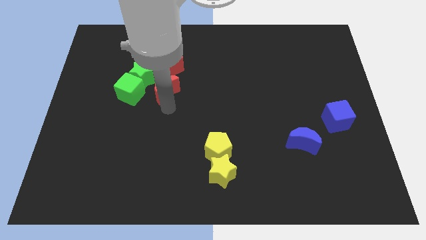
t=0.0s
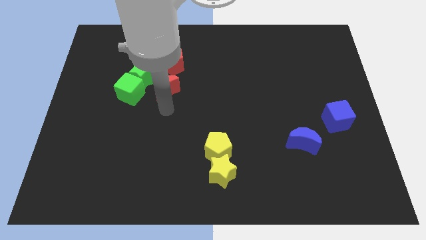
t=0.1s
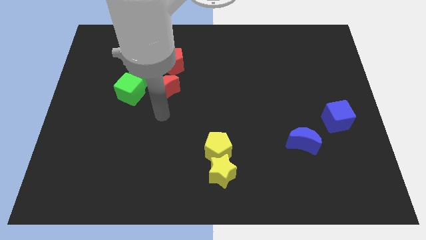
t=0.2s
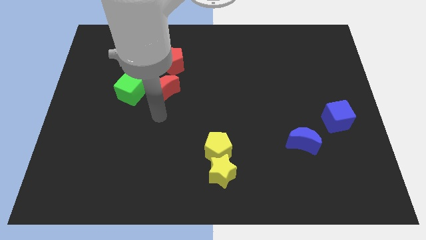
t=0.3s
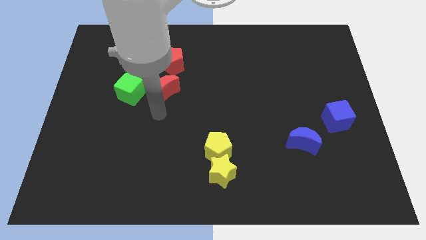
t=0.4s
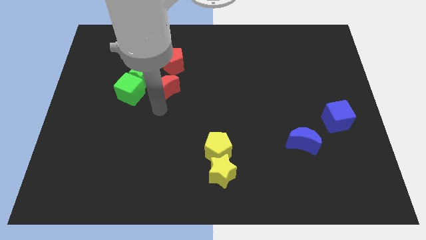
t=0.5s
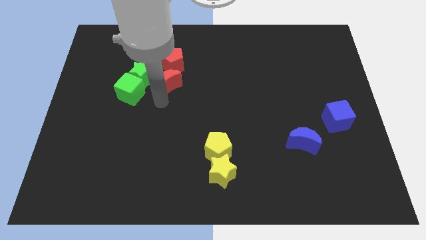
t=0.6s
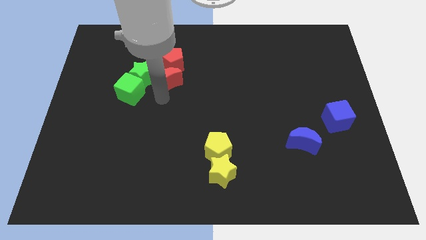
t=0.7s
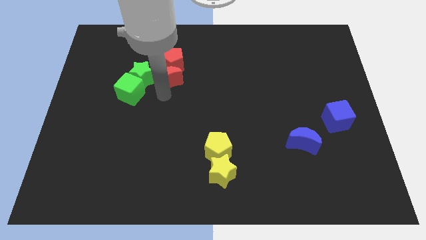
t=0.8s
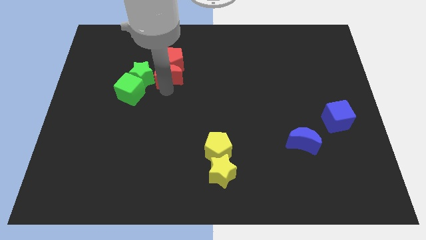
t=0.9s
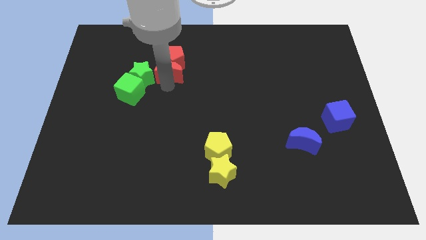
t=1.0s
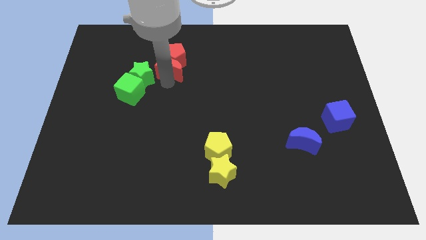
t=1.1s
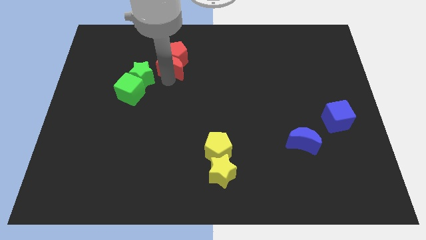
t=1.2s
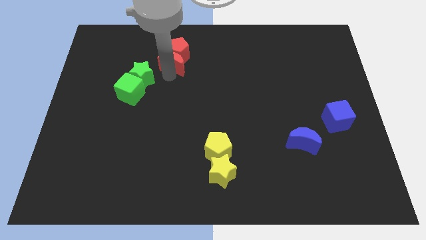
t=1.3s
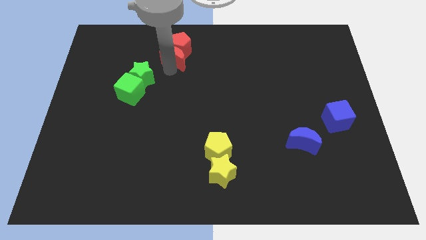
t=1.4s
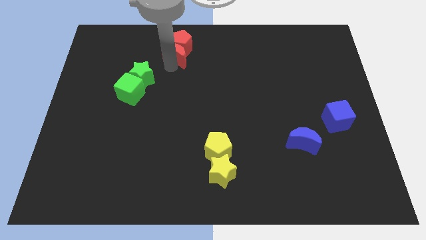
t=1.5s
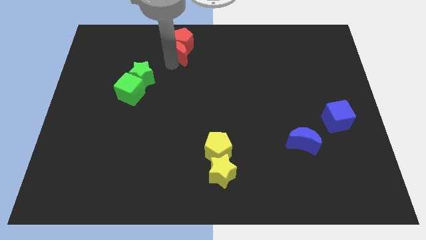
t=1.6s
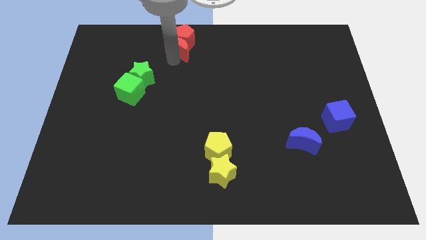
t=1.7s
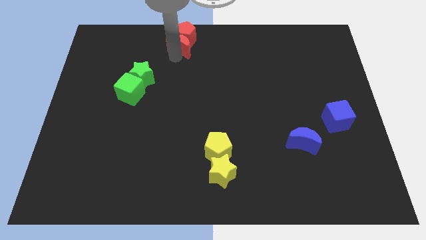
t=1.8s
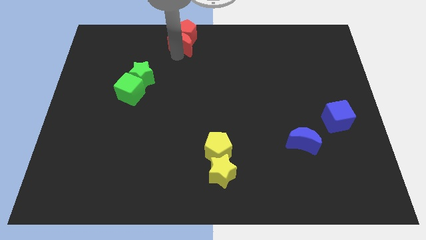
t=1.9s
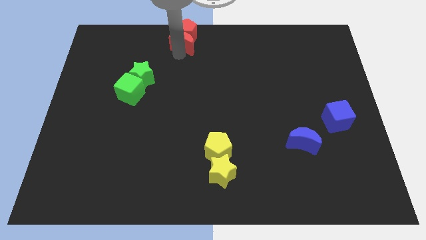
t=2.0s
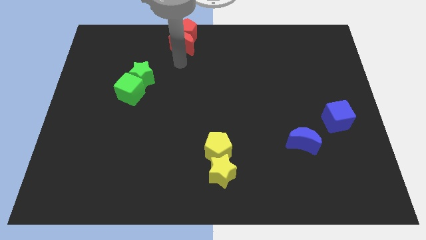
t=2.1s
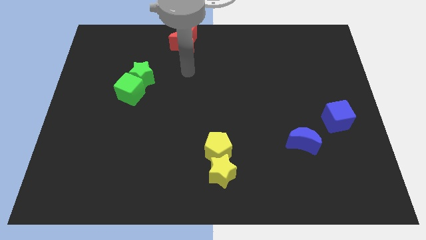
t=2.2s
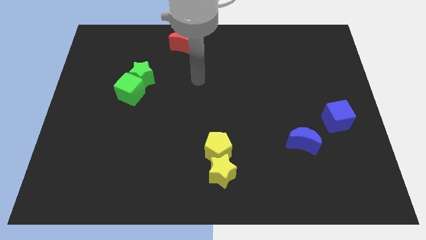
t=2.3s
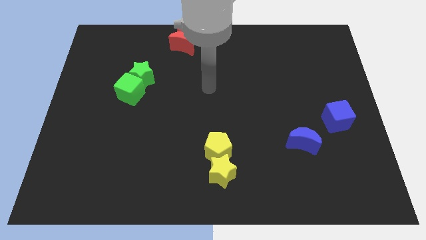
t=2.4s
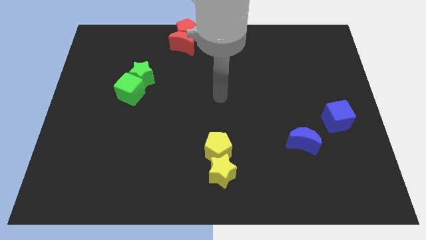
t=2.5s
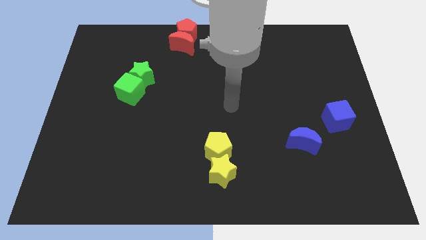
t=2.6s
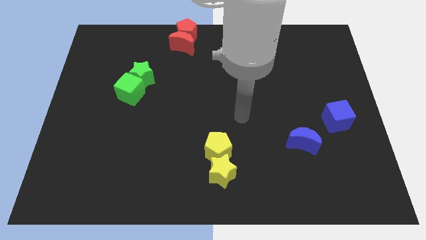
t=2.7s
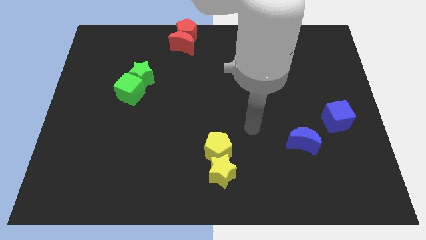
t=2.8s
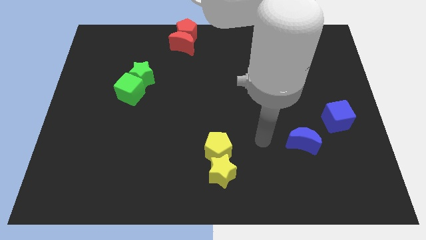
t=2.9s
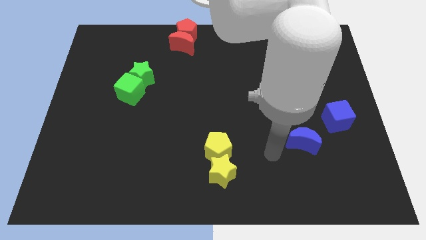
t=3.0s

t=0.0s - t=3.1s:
move the red pentagon to the top center with the red moon

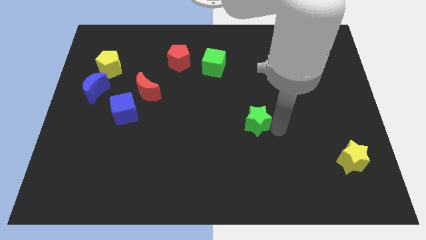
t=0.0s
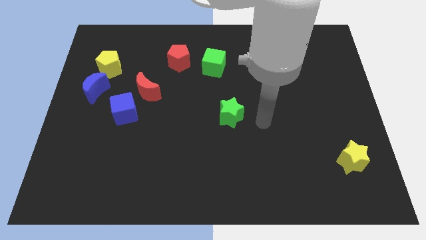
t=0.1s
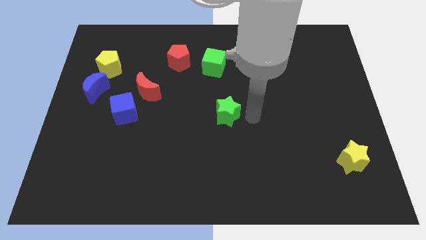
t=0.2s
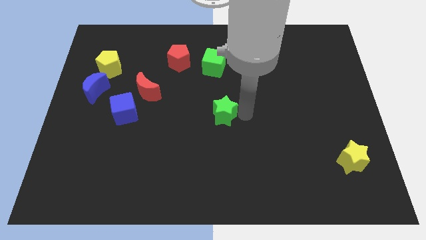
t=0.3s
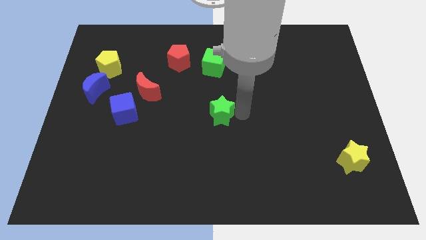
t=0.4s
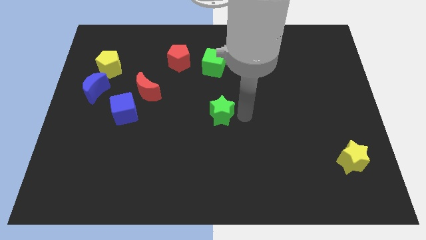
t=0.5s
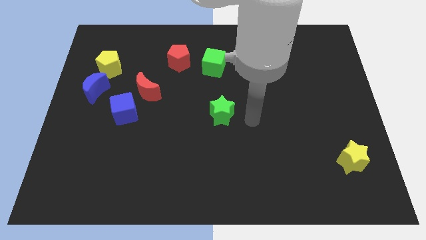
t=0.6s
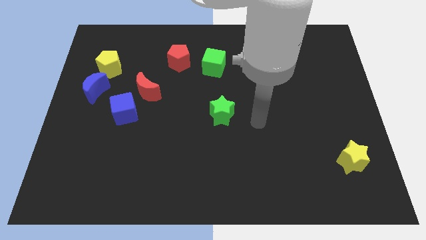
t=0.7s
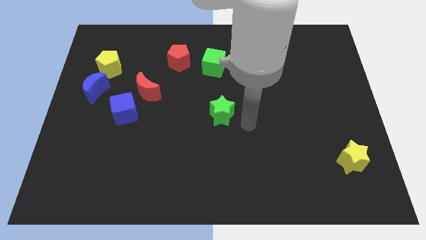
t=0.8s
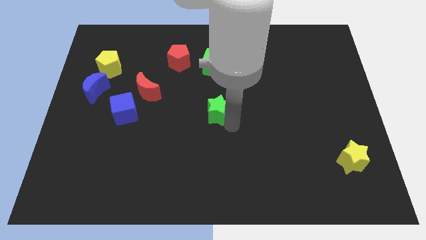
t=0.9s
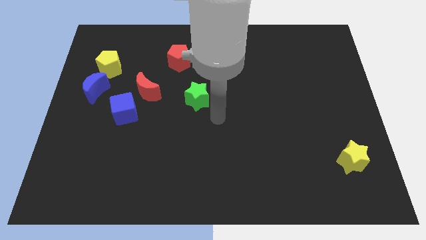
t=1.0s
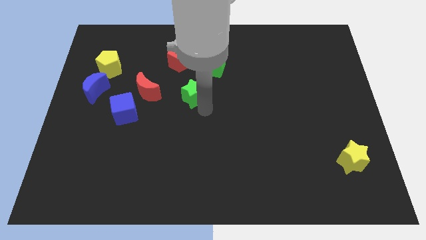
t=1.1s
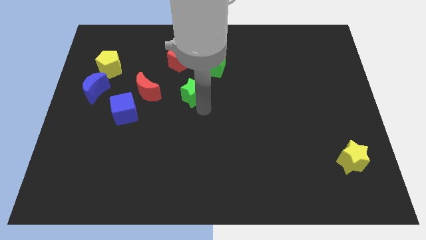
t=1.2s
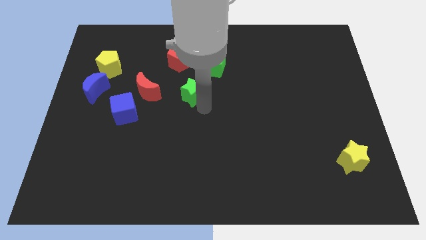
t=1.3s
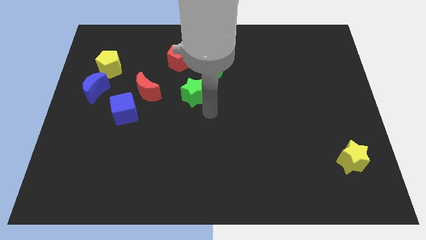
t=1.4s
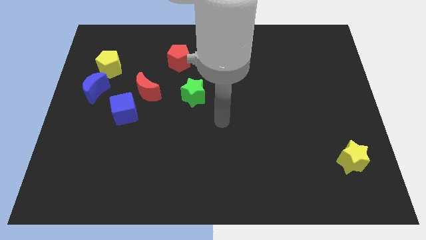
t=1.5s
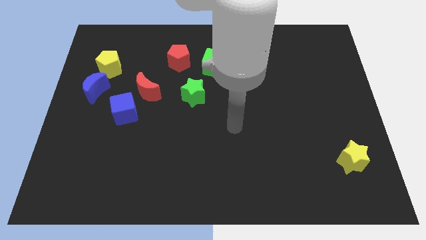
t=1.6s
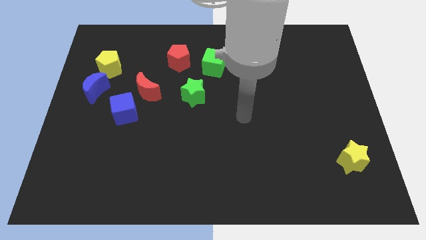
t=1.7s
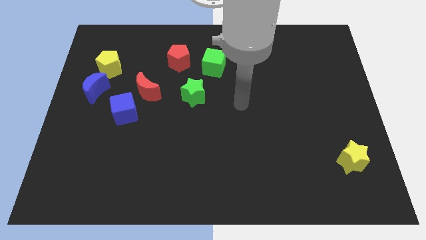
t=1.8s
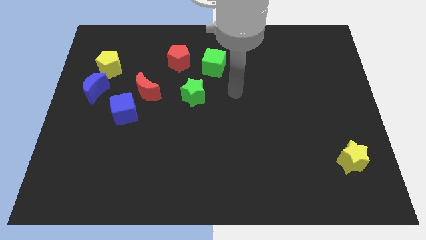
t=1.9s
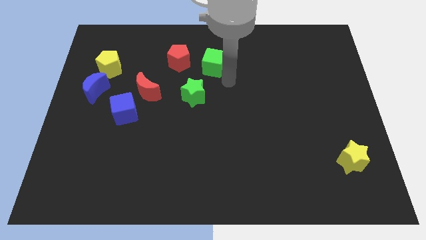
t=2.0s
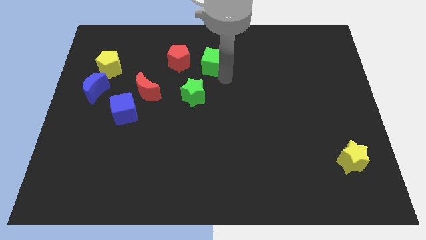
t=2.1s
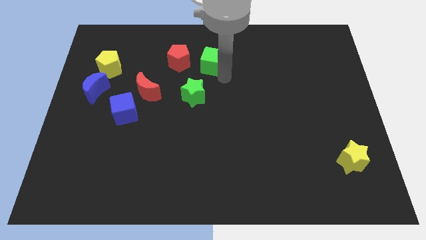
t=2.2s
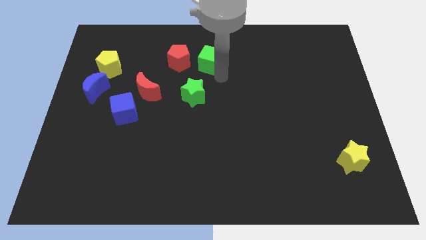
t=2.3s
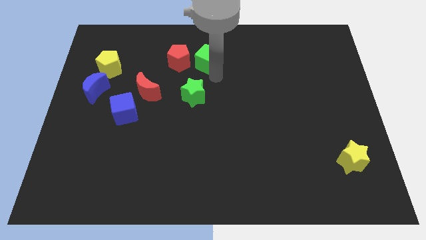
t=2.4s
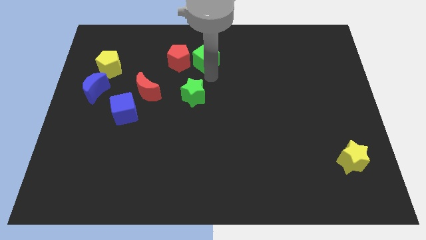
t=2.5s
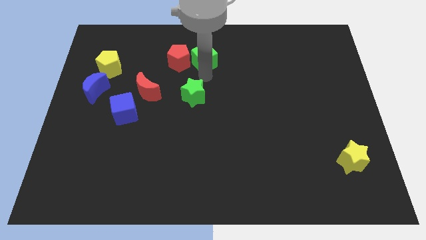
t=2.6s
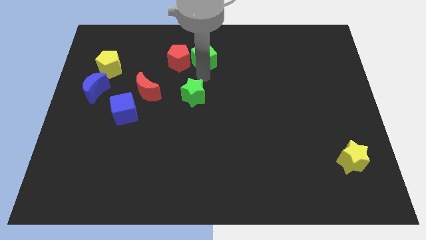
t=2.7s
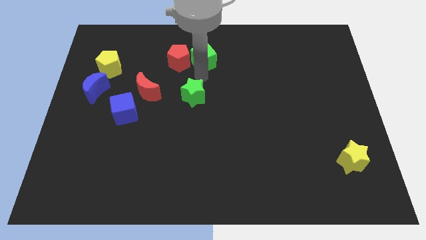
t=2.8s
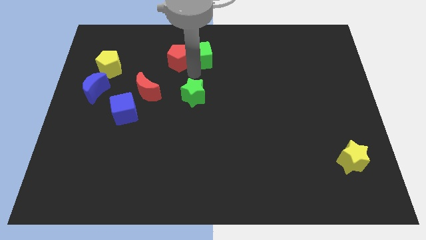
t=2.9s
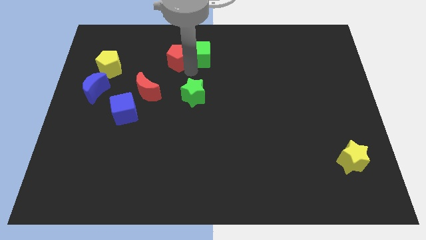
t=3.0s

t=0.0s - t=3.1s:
move the green star and green cube vertically

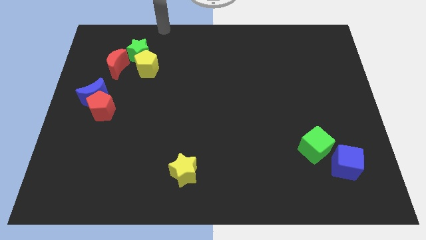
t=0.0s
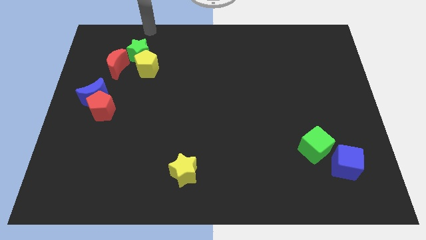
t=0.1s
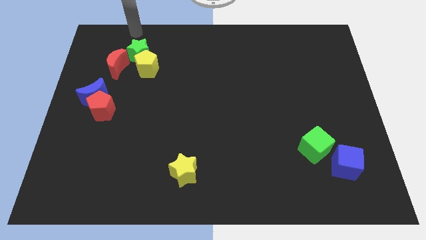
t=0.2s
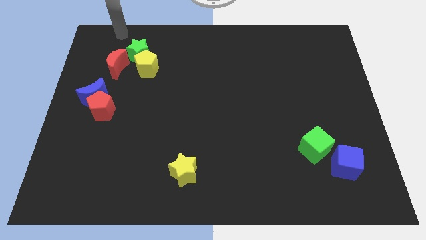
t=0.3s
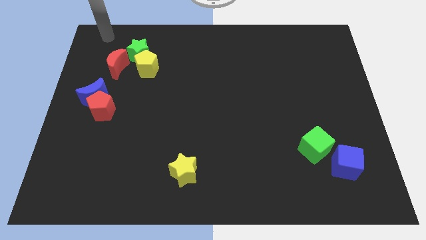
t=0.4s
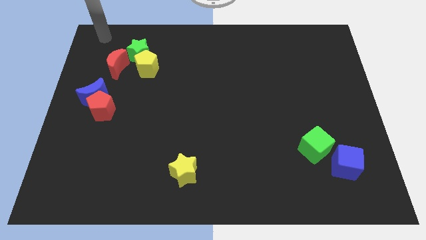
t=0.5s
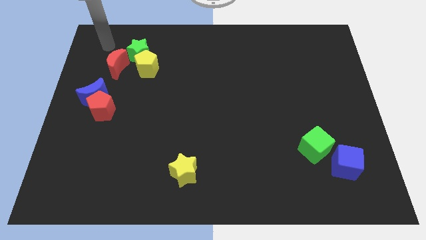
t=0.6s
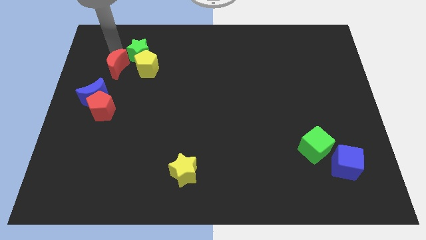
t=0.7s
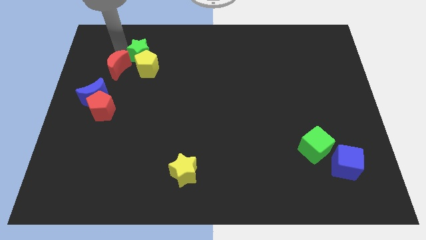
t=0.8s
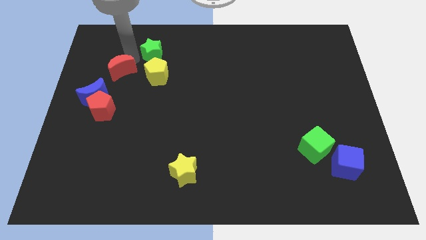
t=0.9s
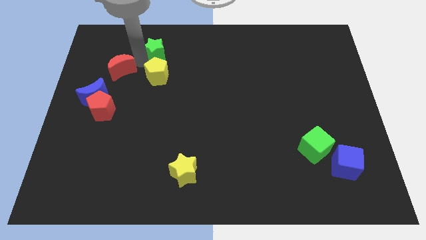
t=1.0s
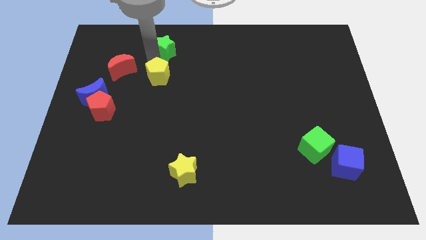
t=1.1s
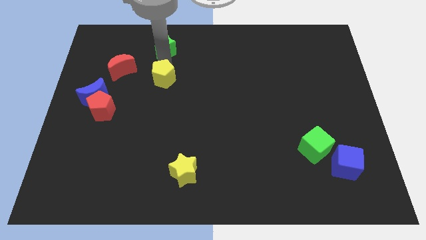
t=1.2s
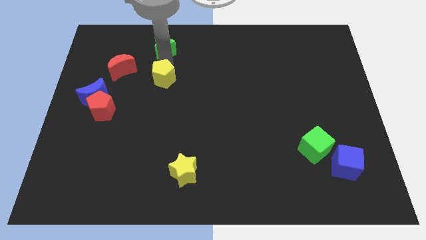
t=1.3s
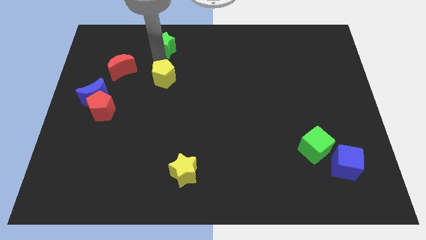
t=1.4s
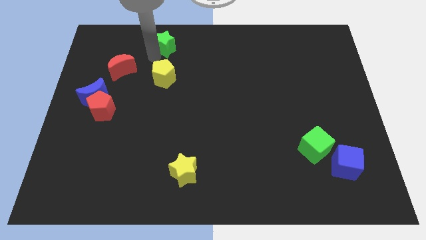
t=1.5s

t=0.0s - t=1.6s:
separate the red moon green star and yellow pentagon

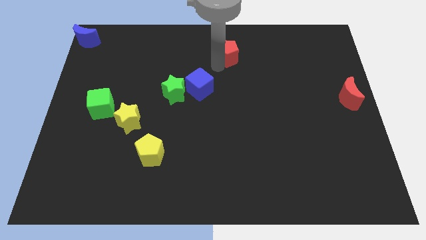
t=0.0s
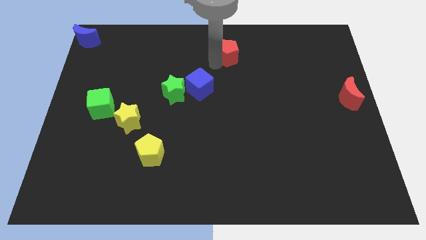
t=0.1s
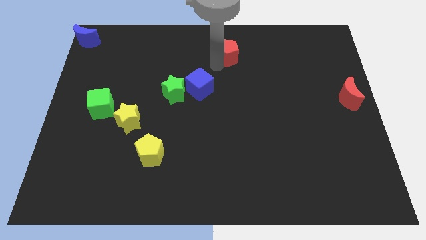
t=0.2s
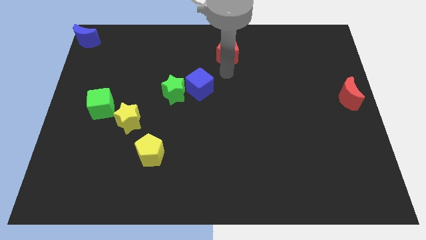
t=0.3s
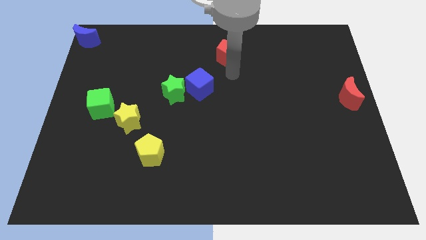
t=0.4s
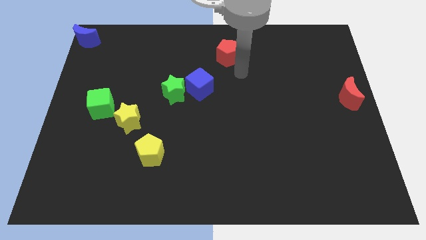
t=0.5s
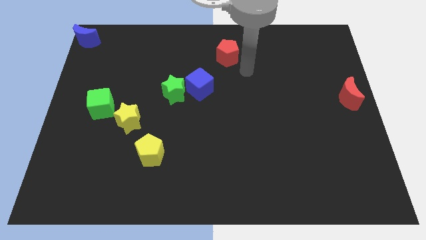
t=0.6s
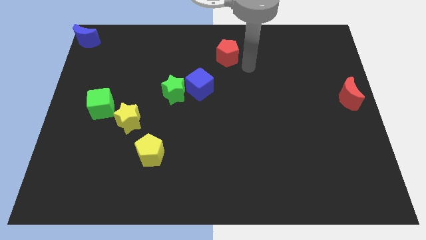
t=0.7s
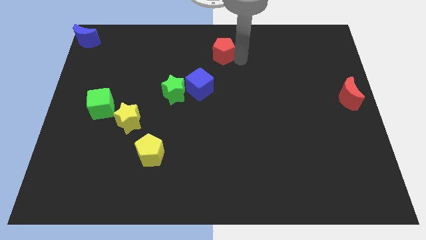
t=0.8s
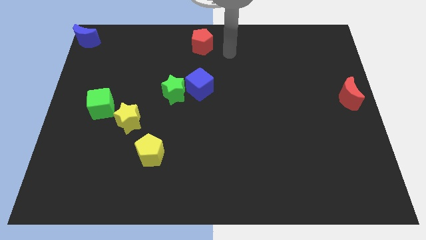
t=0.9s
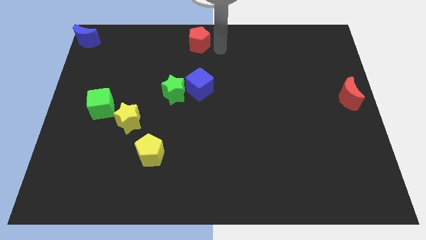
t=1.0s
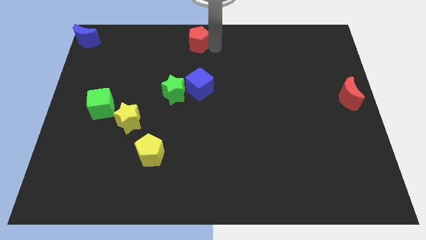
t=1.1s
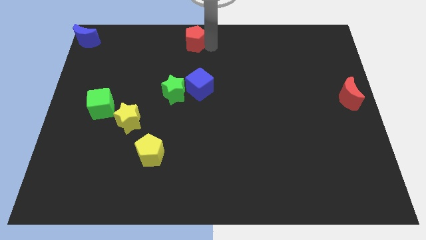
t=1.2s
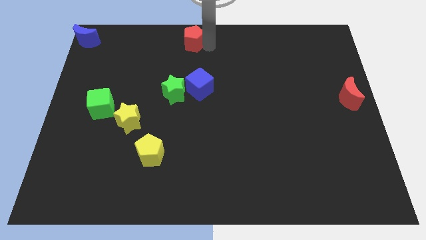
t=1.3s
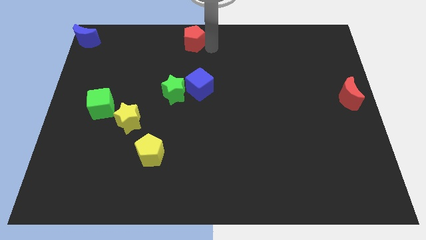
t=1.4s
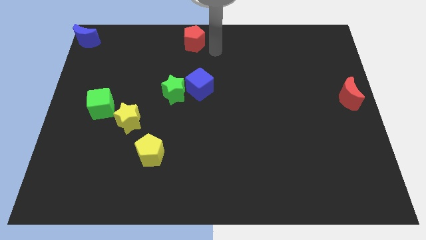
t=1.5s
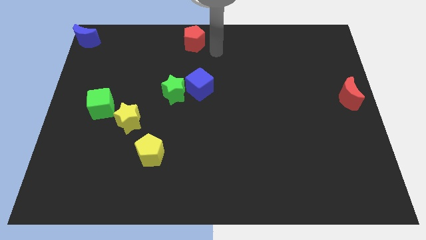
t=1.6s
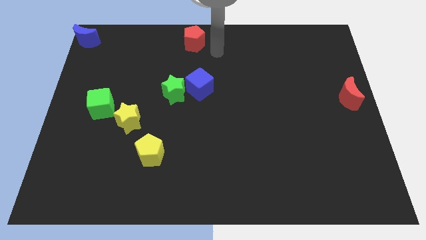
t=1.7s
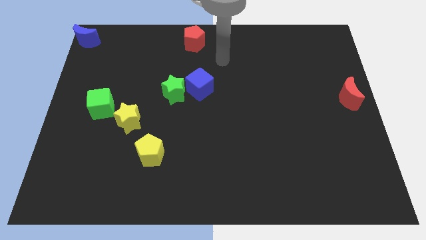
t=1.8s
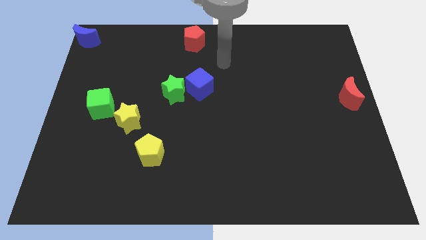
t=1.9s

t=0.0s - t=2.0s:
move the red pentagon towards the top center
